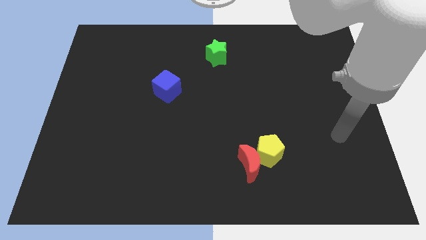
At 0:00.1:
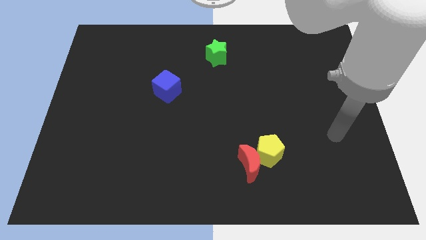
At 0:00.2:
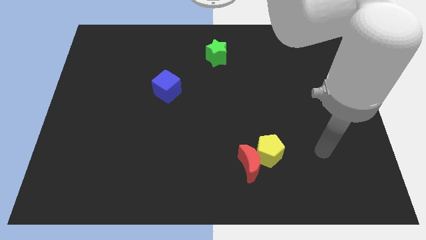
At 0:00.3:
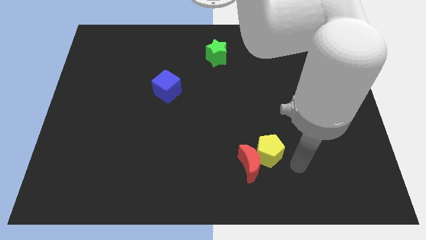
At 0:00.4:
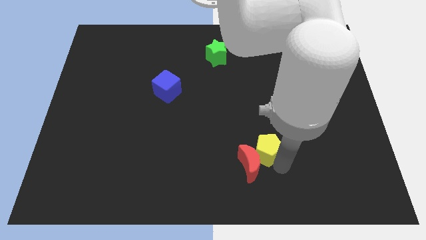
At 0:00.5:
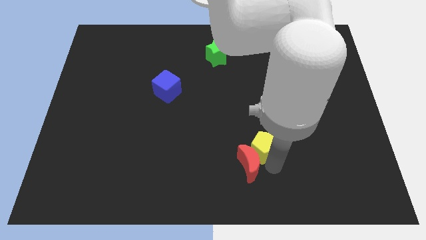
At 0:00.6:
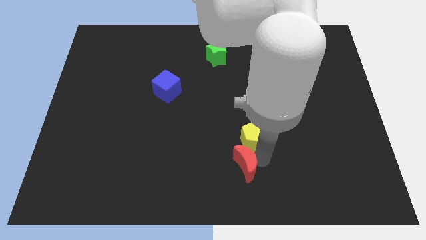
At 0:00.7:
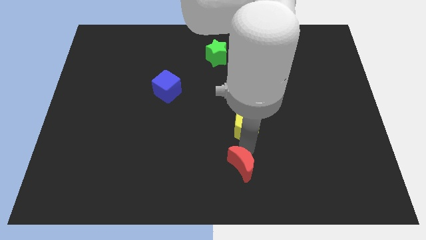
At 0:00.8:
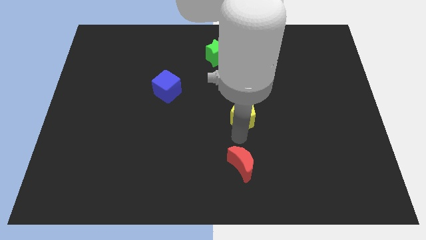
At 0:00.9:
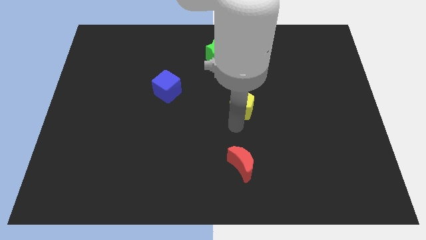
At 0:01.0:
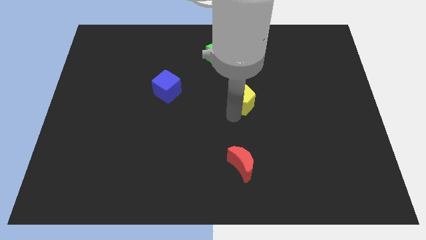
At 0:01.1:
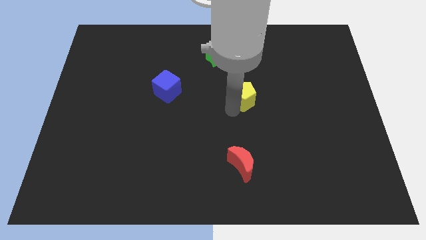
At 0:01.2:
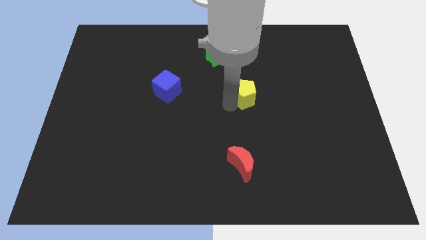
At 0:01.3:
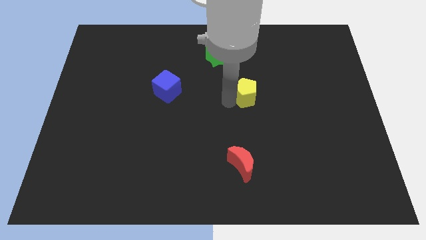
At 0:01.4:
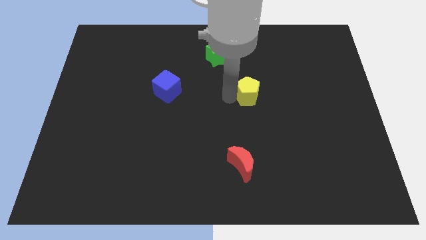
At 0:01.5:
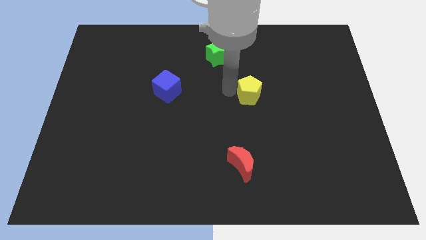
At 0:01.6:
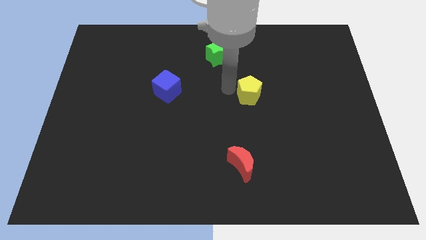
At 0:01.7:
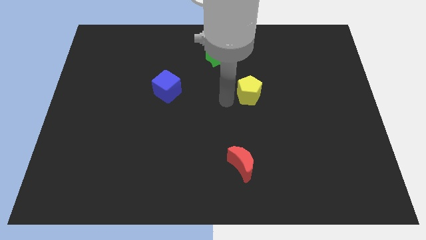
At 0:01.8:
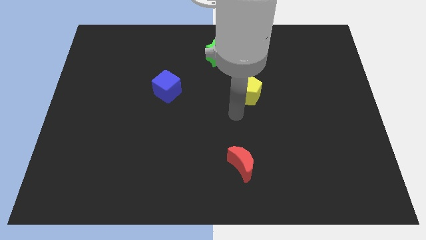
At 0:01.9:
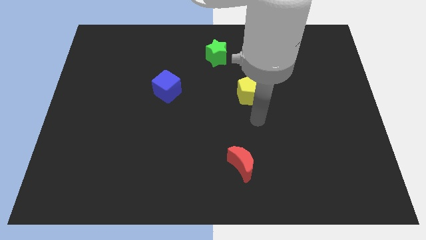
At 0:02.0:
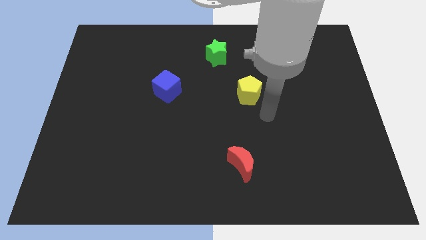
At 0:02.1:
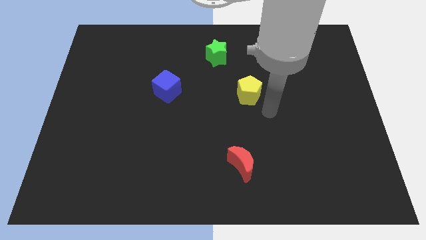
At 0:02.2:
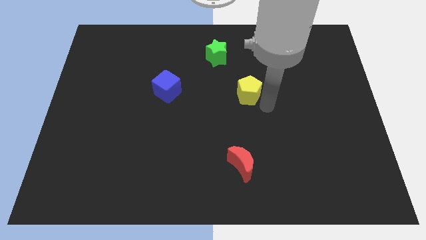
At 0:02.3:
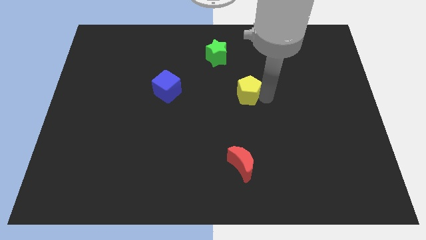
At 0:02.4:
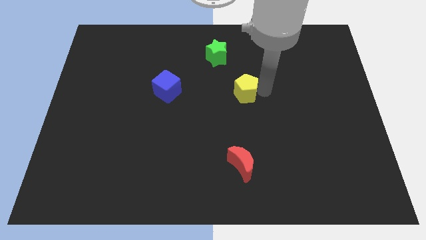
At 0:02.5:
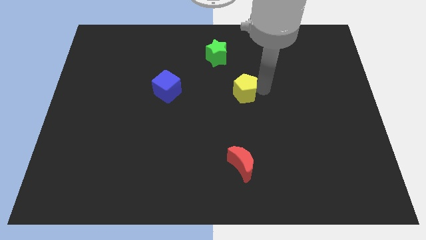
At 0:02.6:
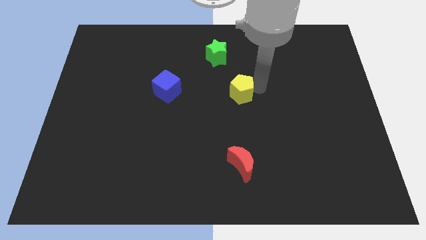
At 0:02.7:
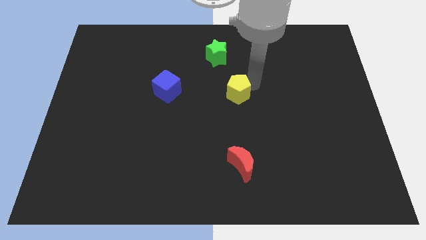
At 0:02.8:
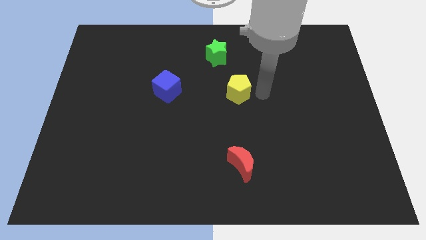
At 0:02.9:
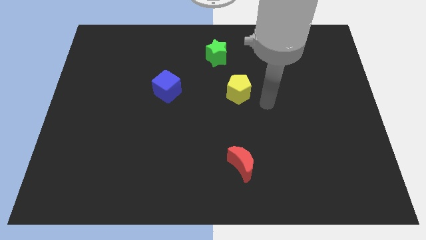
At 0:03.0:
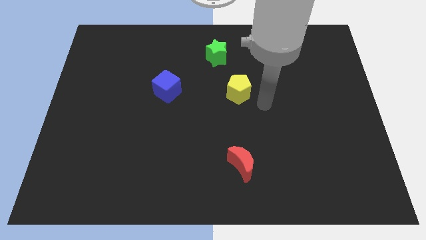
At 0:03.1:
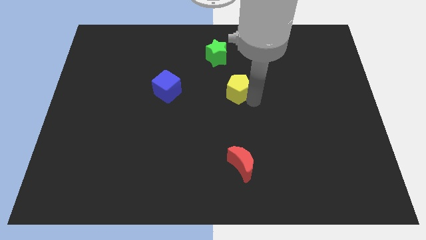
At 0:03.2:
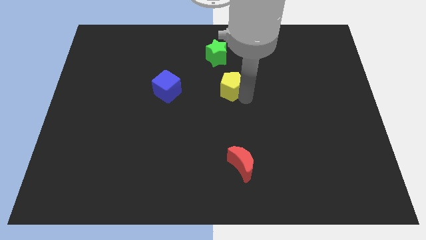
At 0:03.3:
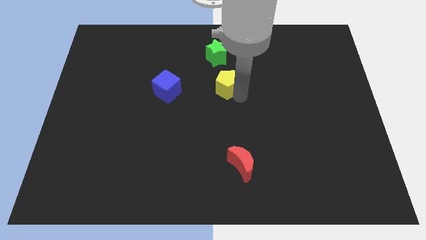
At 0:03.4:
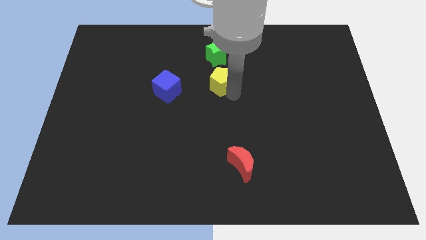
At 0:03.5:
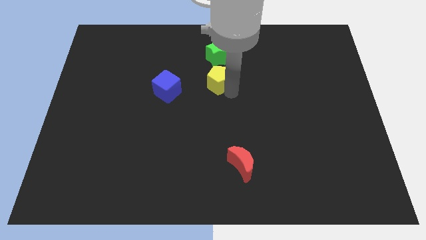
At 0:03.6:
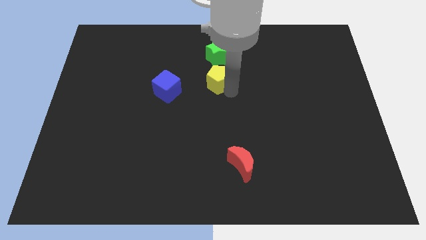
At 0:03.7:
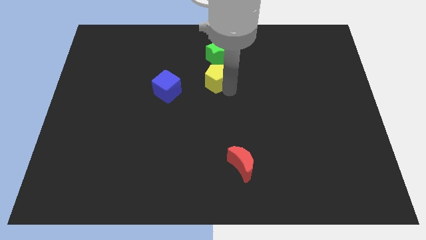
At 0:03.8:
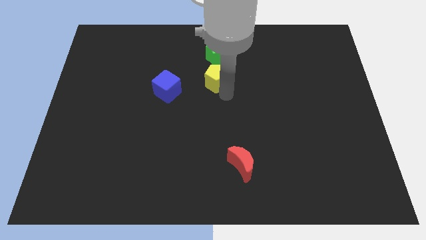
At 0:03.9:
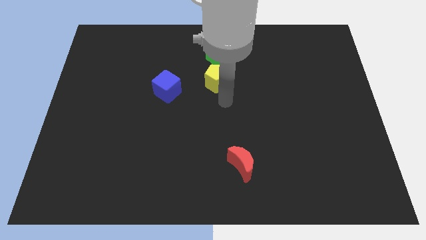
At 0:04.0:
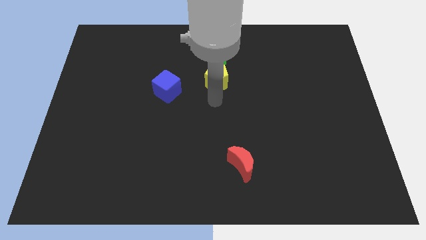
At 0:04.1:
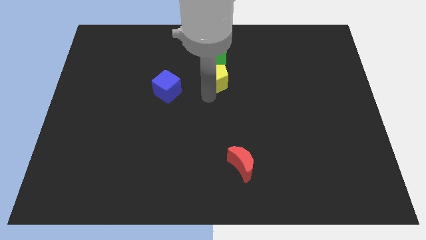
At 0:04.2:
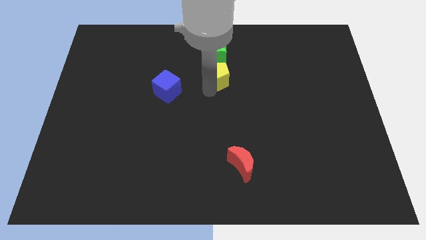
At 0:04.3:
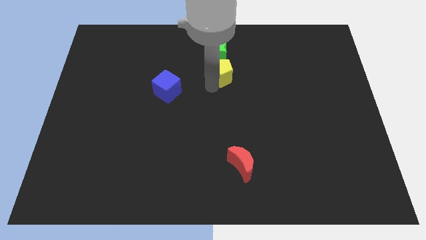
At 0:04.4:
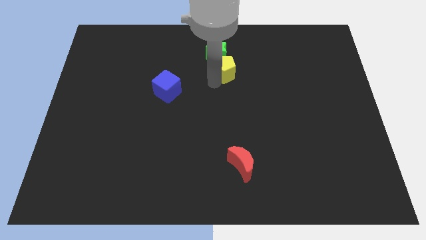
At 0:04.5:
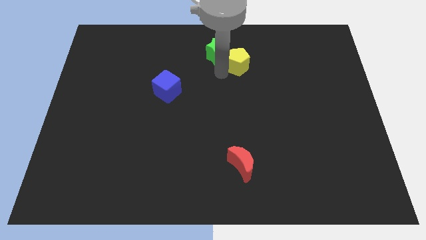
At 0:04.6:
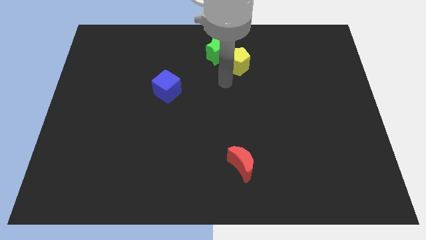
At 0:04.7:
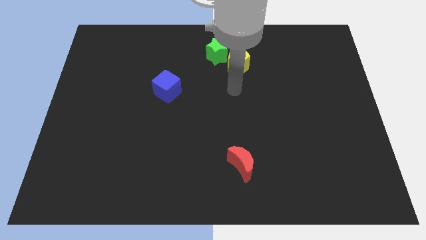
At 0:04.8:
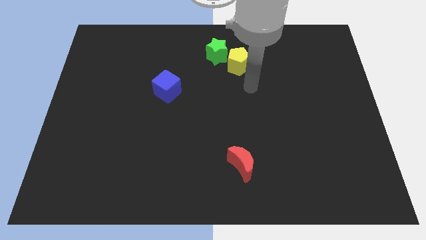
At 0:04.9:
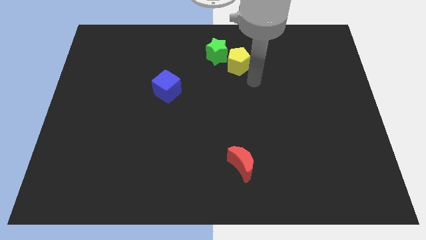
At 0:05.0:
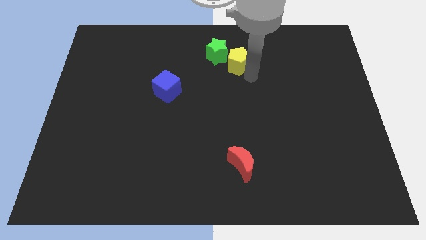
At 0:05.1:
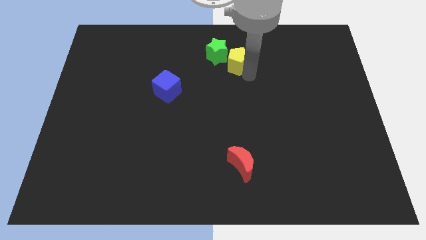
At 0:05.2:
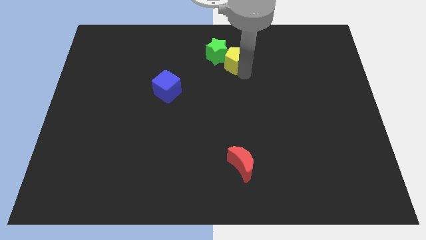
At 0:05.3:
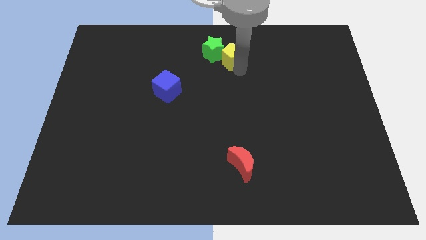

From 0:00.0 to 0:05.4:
put the yellow block next to the green block

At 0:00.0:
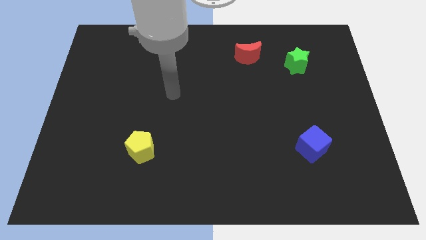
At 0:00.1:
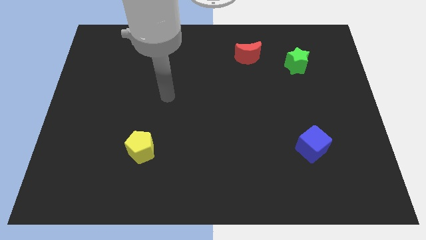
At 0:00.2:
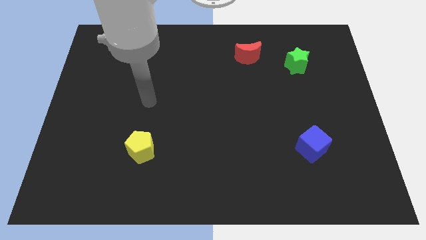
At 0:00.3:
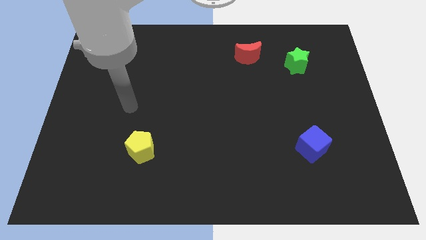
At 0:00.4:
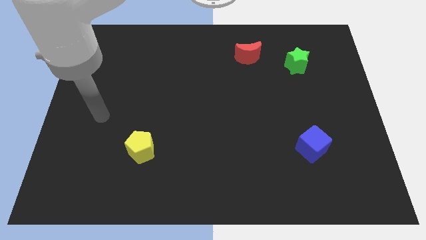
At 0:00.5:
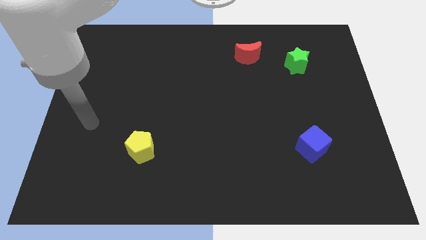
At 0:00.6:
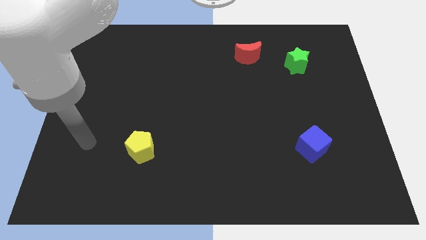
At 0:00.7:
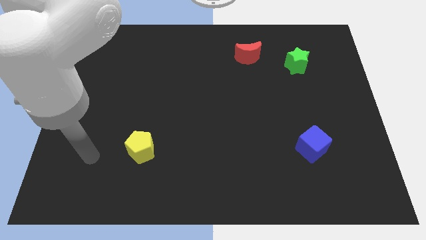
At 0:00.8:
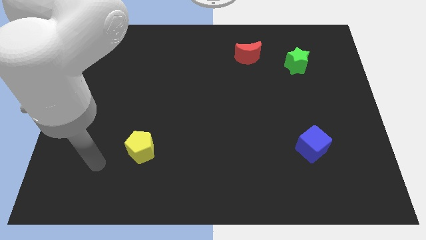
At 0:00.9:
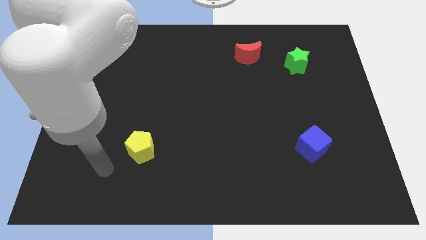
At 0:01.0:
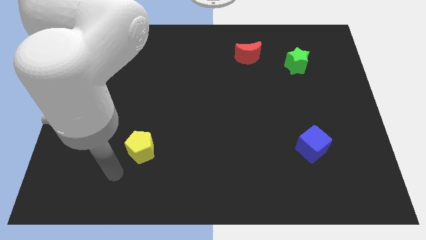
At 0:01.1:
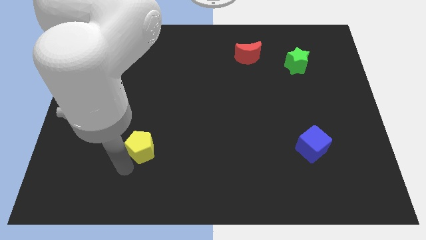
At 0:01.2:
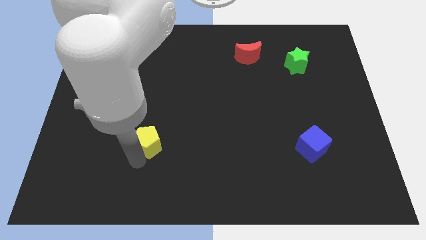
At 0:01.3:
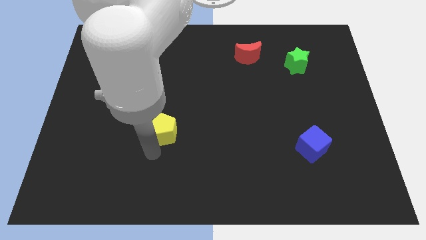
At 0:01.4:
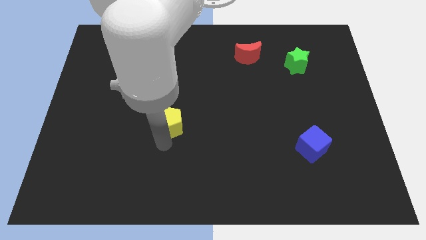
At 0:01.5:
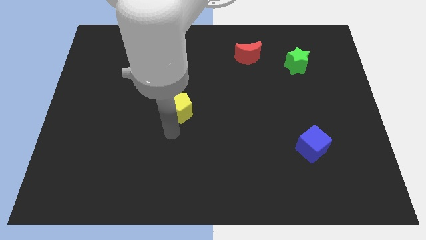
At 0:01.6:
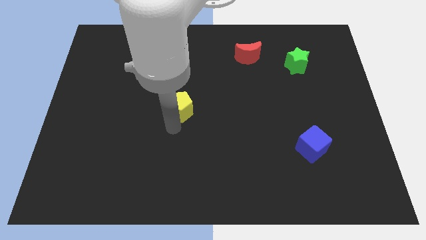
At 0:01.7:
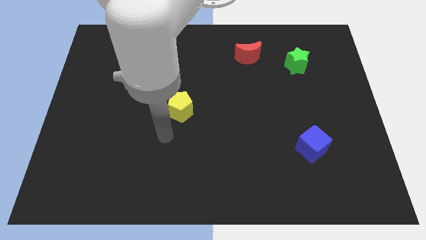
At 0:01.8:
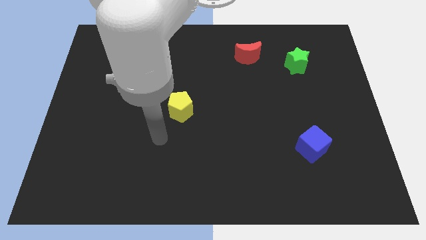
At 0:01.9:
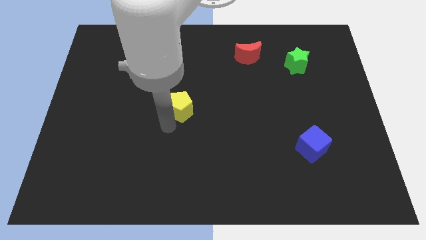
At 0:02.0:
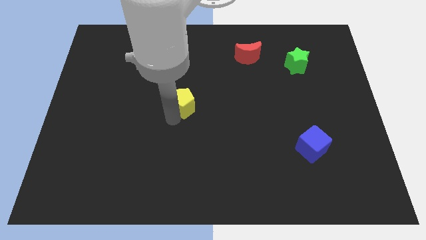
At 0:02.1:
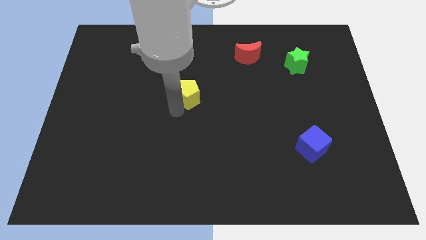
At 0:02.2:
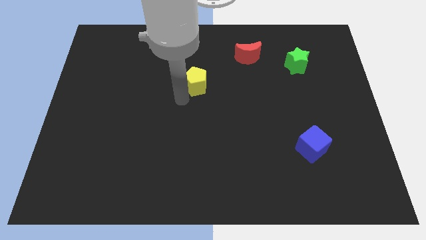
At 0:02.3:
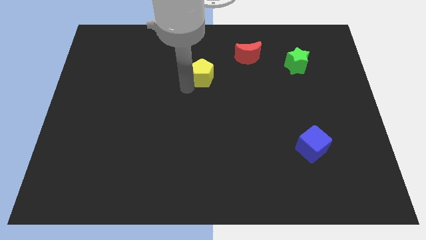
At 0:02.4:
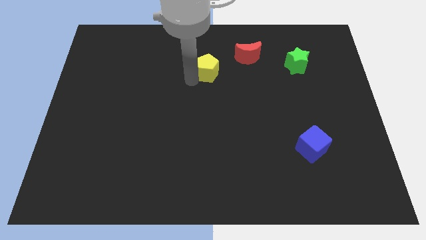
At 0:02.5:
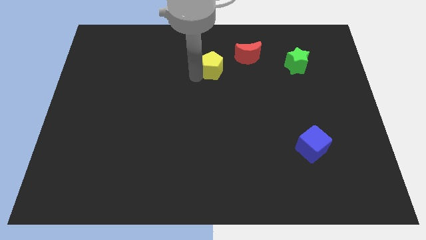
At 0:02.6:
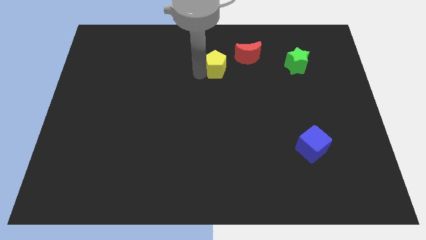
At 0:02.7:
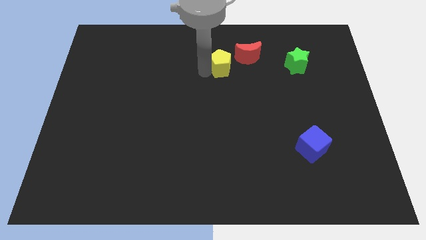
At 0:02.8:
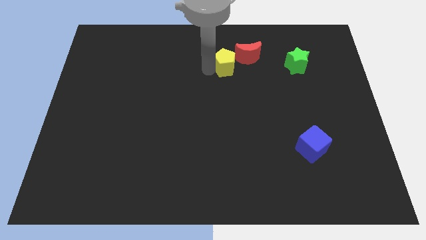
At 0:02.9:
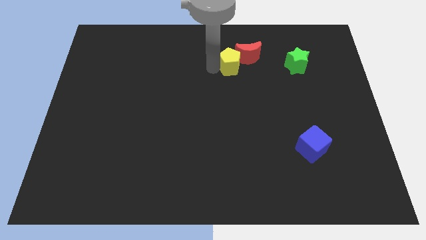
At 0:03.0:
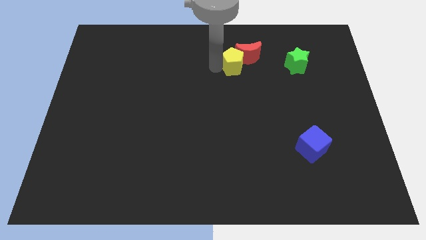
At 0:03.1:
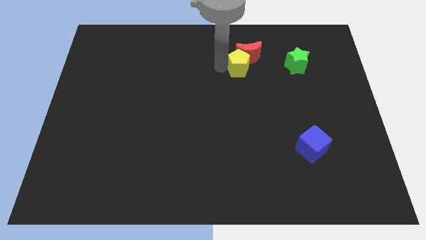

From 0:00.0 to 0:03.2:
move the yellow block next to the red block

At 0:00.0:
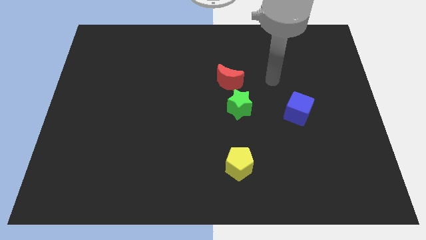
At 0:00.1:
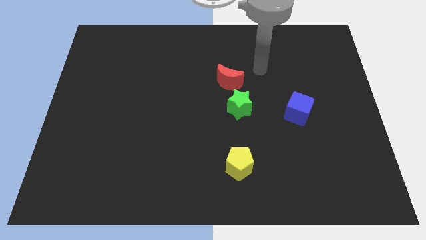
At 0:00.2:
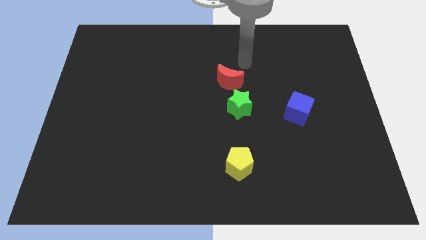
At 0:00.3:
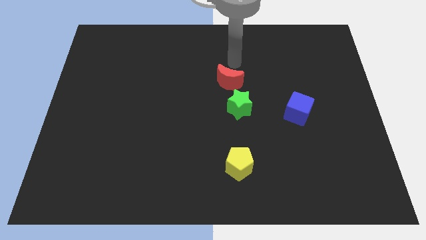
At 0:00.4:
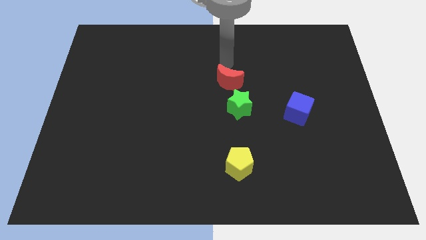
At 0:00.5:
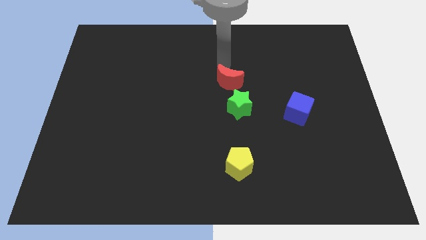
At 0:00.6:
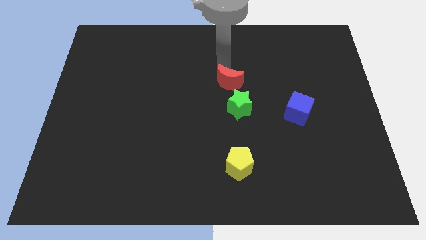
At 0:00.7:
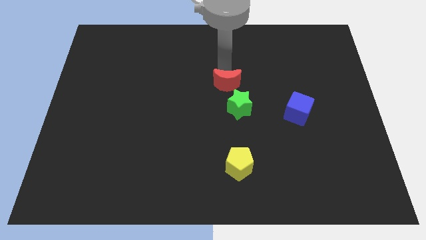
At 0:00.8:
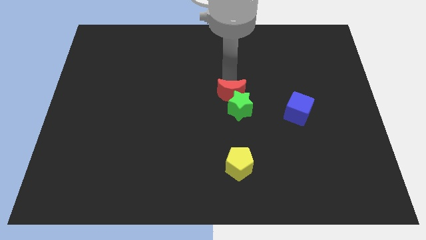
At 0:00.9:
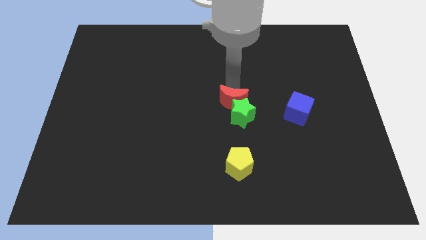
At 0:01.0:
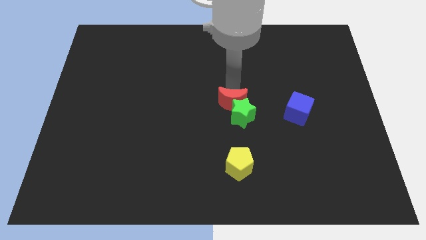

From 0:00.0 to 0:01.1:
move the red block close to the green block
